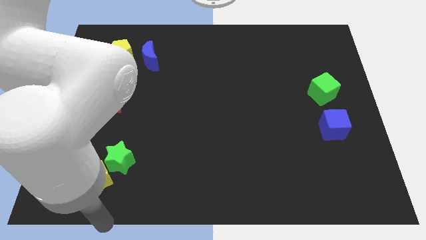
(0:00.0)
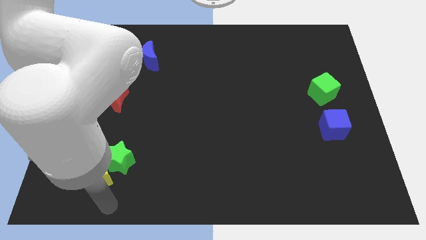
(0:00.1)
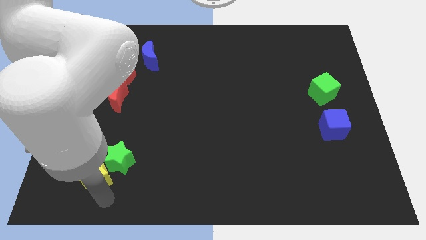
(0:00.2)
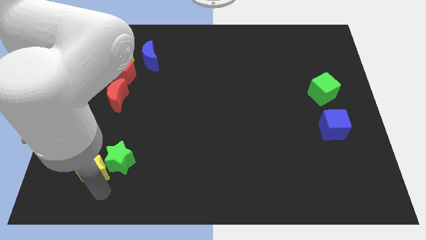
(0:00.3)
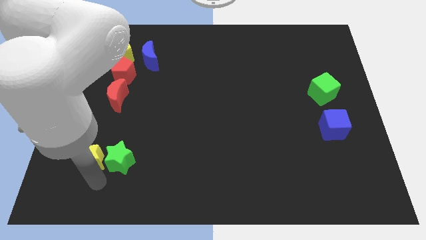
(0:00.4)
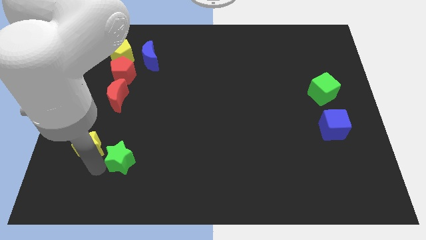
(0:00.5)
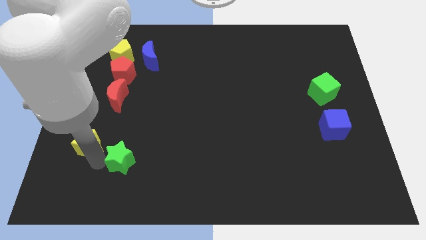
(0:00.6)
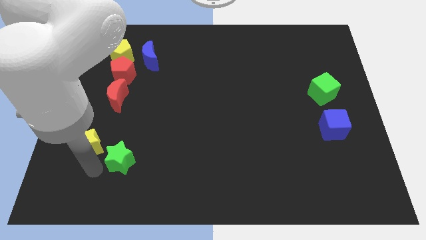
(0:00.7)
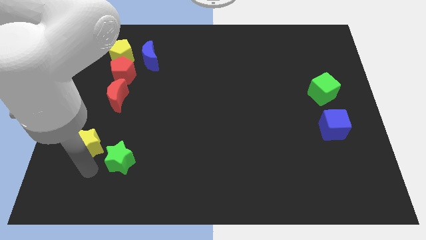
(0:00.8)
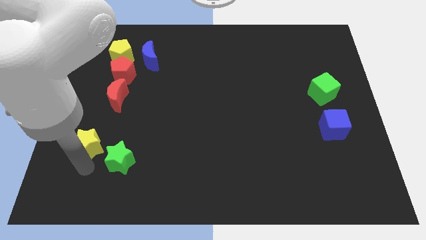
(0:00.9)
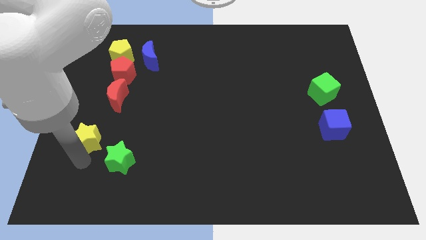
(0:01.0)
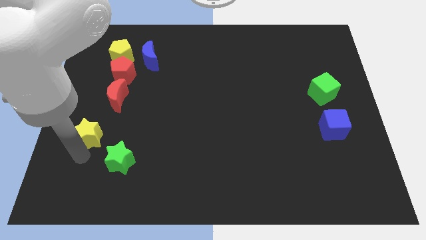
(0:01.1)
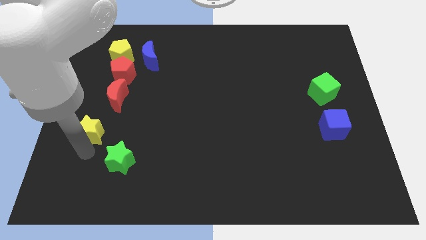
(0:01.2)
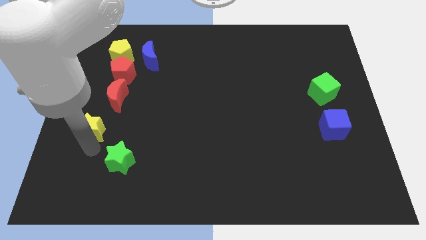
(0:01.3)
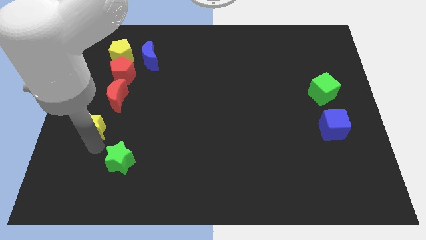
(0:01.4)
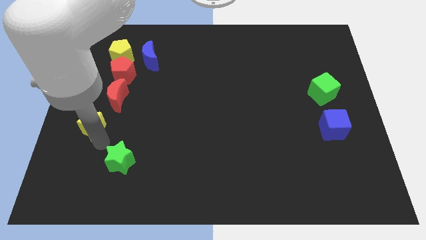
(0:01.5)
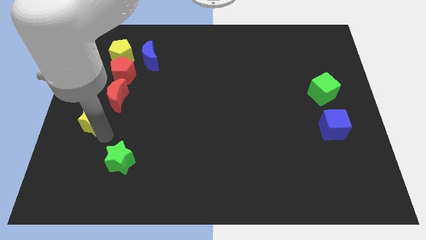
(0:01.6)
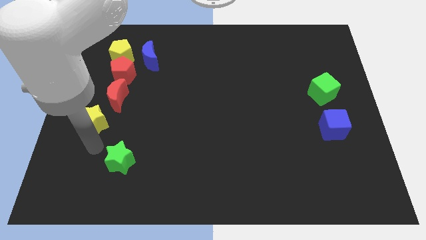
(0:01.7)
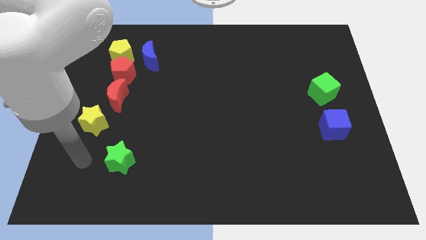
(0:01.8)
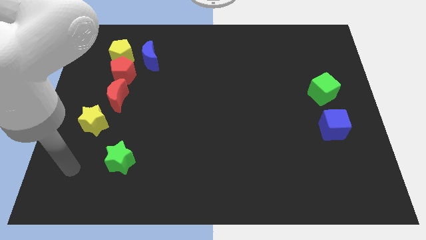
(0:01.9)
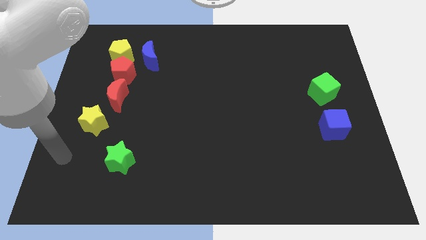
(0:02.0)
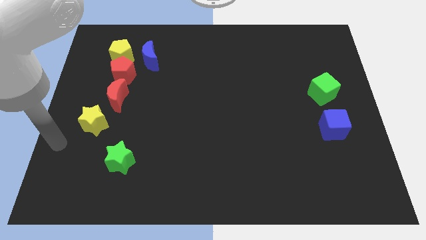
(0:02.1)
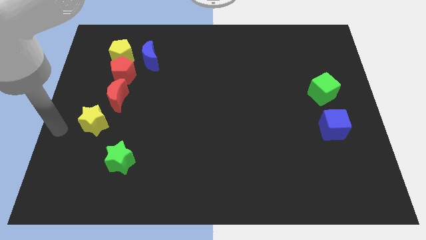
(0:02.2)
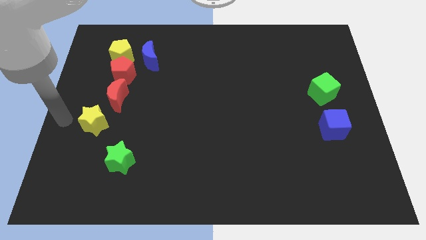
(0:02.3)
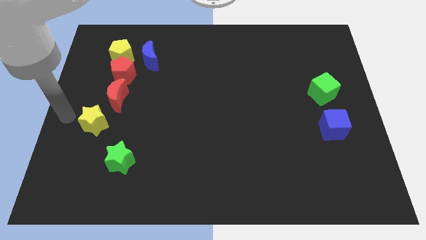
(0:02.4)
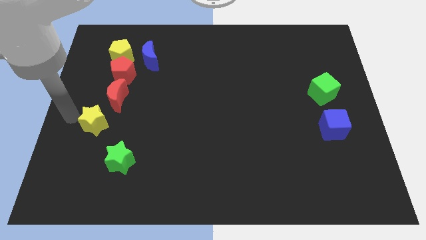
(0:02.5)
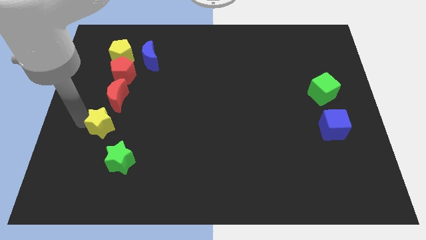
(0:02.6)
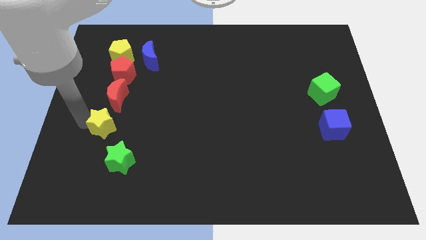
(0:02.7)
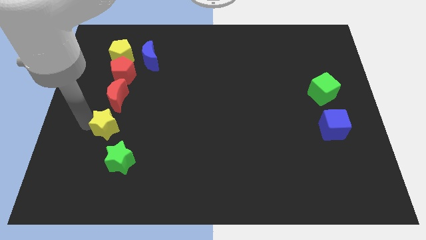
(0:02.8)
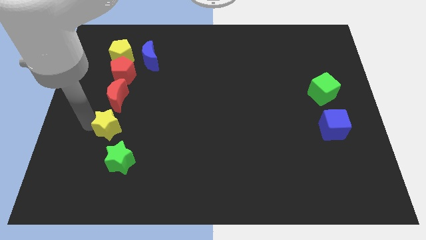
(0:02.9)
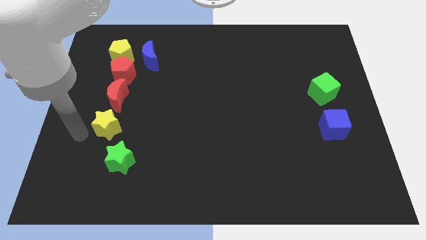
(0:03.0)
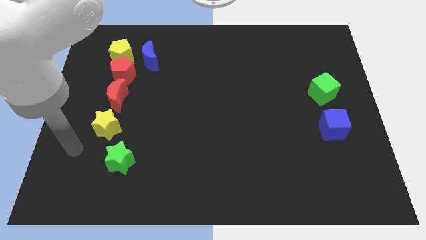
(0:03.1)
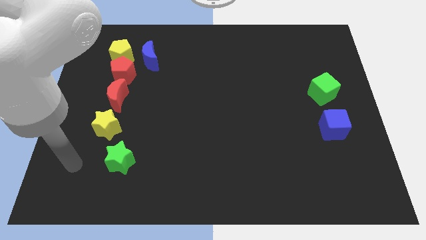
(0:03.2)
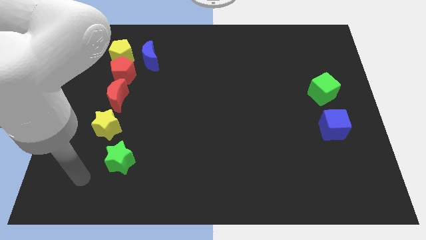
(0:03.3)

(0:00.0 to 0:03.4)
drag yellow star below red moon

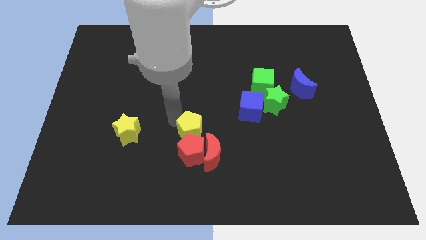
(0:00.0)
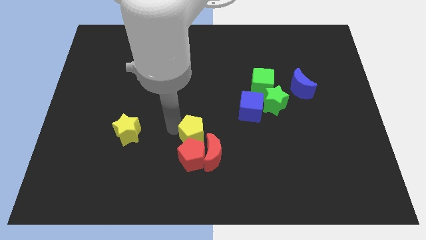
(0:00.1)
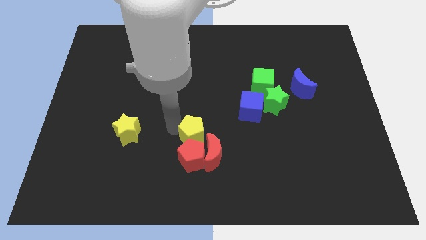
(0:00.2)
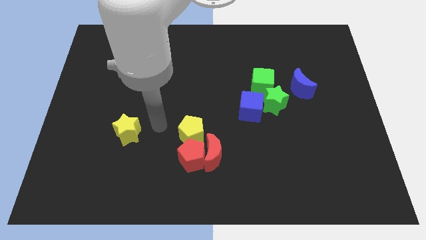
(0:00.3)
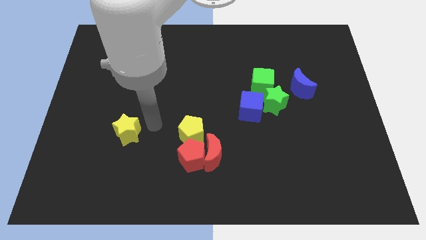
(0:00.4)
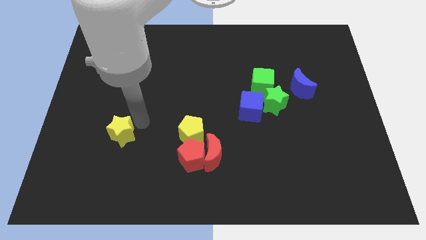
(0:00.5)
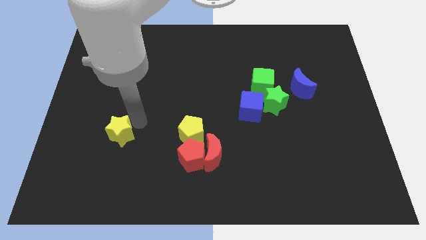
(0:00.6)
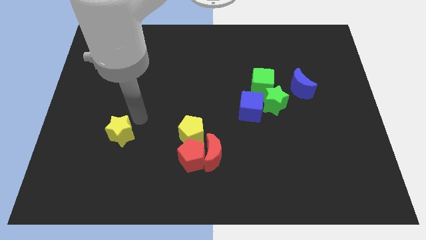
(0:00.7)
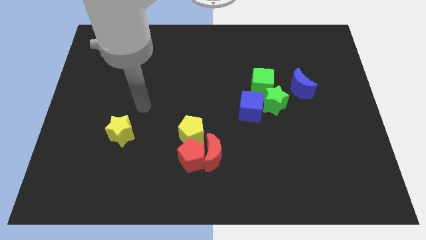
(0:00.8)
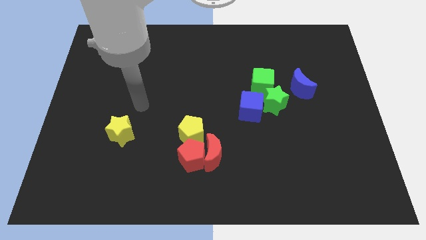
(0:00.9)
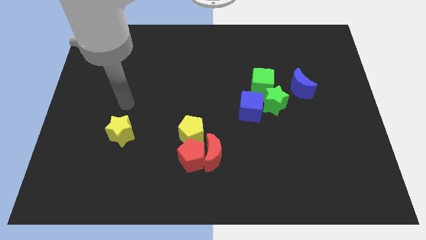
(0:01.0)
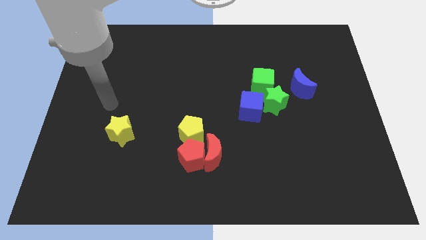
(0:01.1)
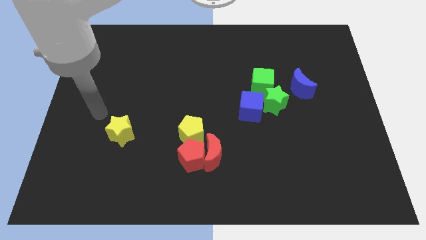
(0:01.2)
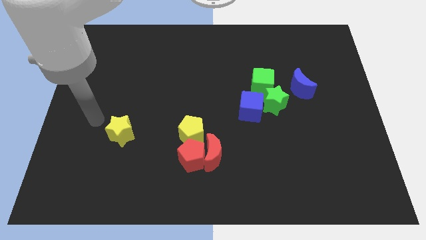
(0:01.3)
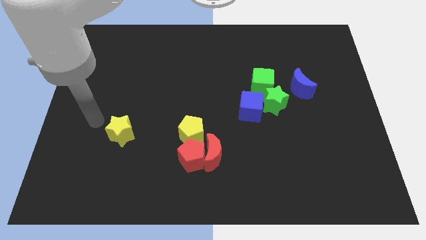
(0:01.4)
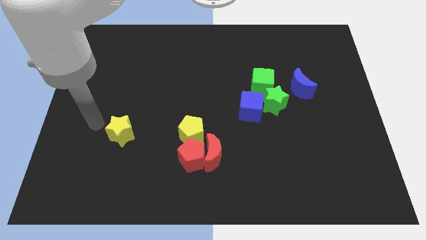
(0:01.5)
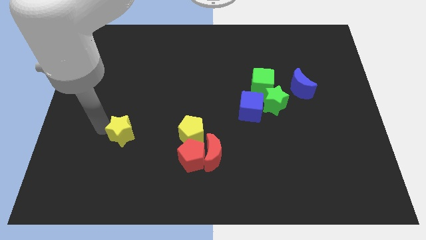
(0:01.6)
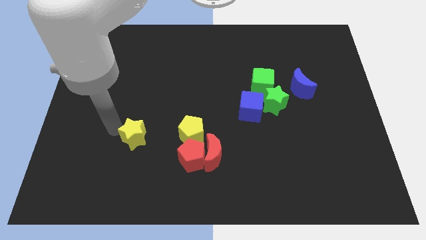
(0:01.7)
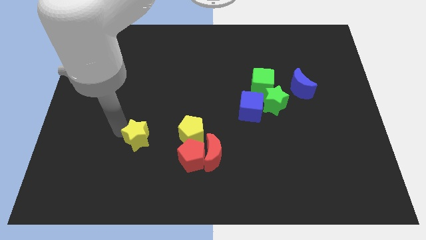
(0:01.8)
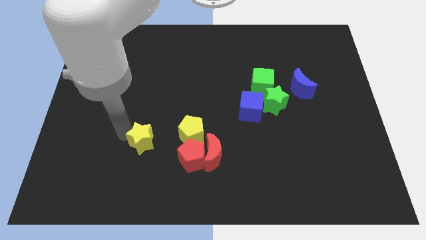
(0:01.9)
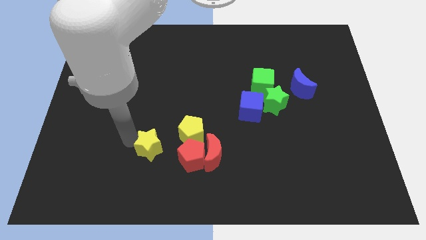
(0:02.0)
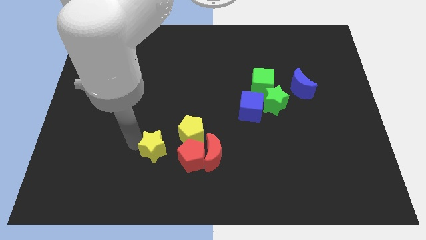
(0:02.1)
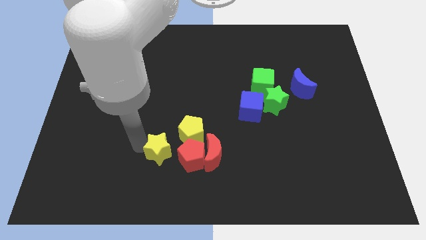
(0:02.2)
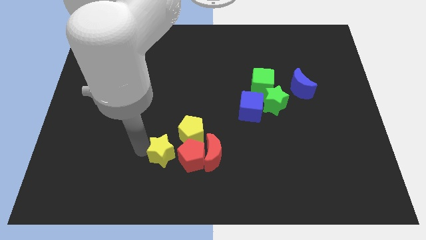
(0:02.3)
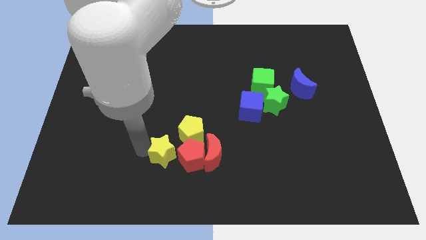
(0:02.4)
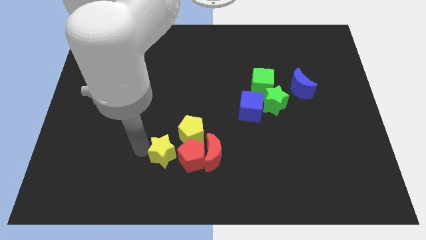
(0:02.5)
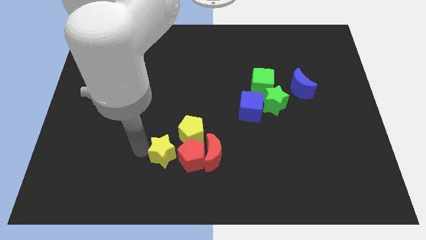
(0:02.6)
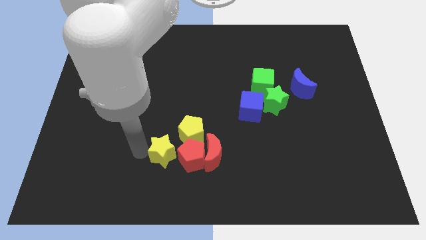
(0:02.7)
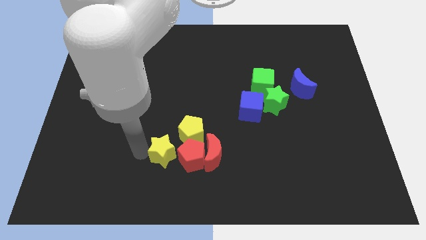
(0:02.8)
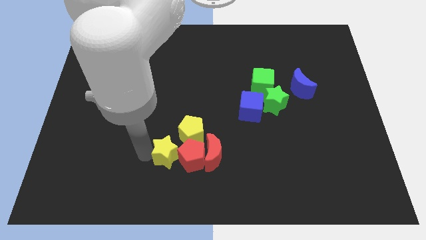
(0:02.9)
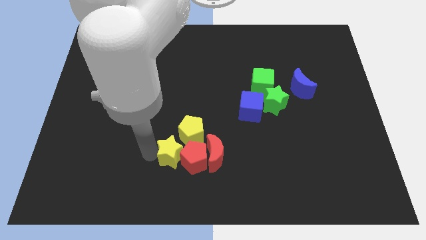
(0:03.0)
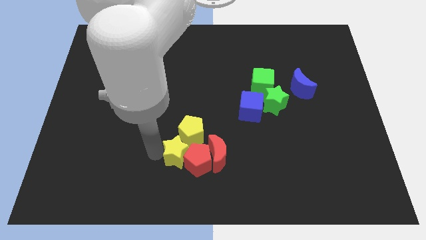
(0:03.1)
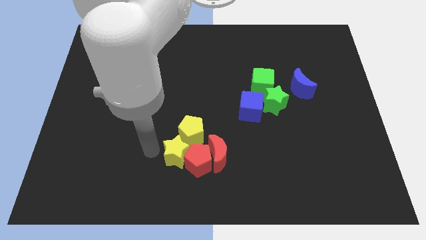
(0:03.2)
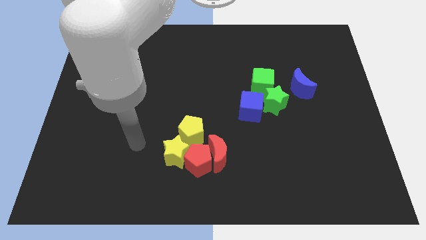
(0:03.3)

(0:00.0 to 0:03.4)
push the yellow star into the group of blocks

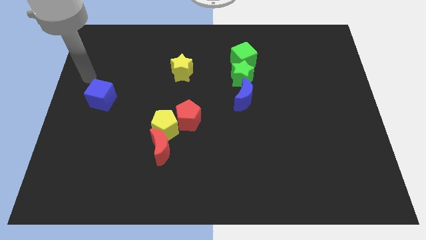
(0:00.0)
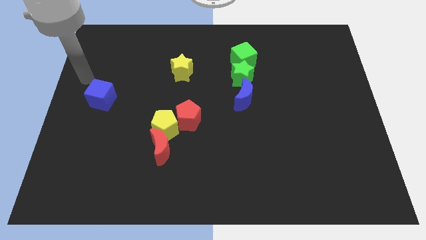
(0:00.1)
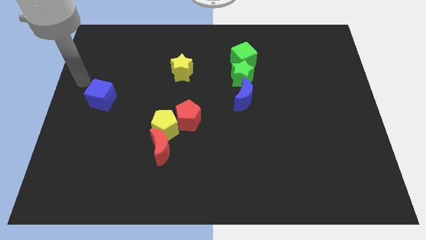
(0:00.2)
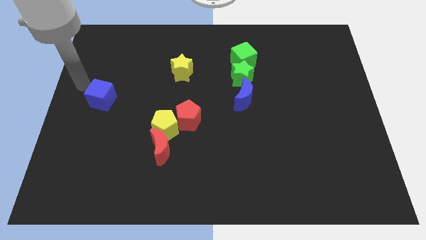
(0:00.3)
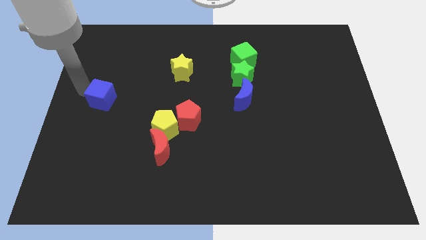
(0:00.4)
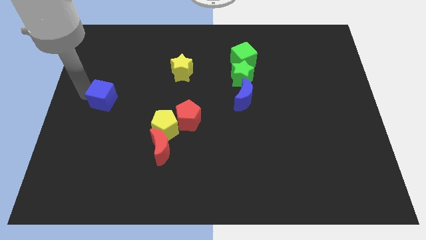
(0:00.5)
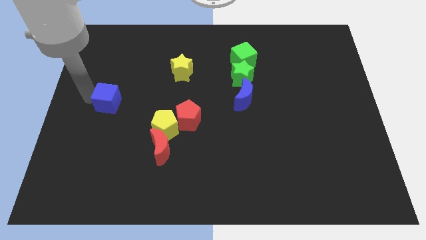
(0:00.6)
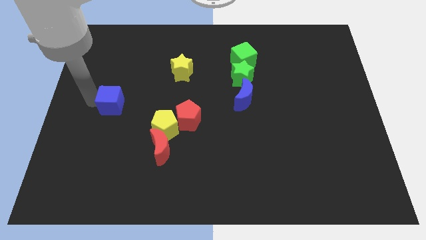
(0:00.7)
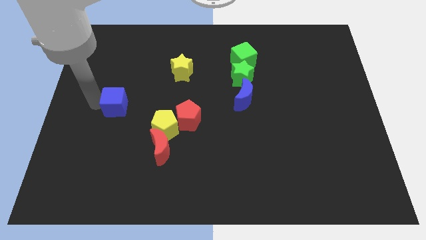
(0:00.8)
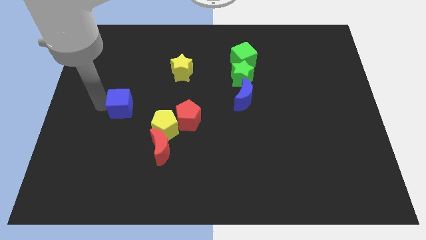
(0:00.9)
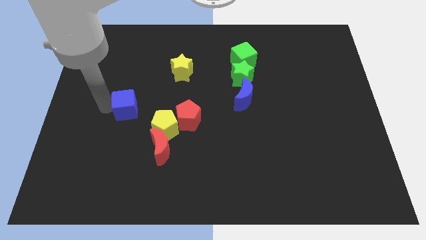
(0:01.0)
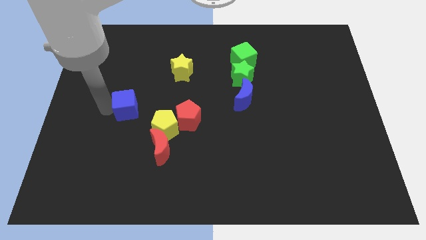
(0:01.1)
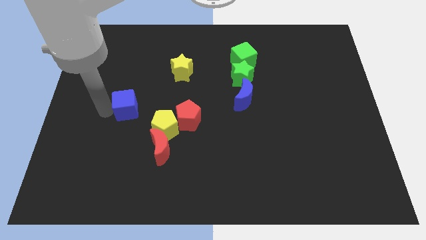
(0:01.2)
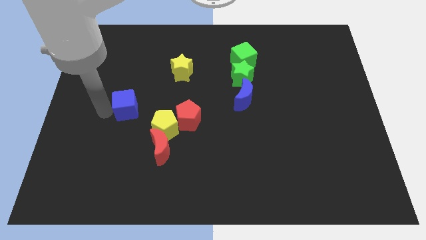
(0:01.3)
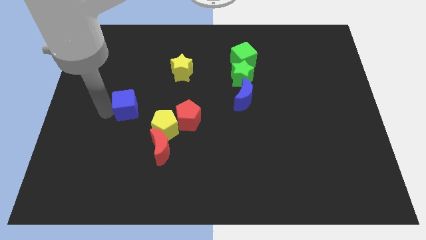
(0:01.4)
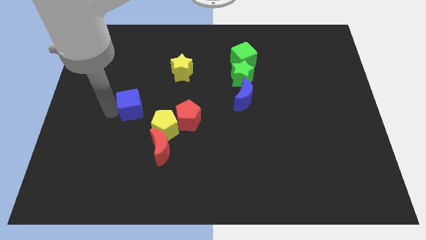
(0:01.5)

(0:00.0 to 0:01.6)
move the blue cube slightly to the right

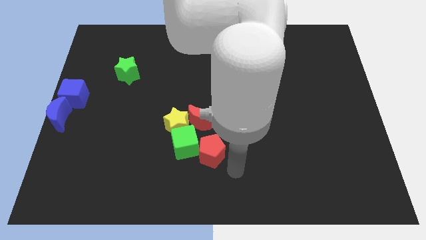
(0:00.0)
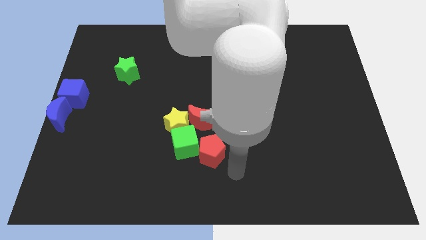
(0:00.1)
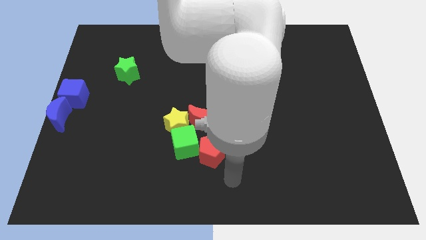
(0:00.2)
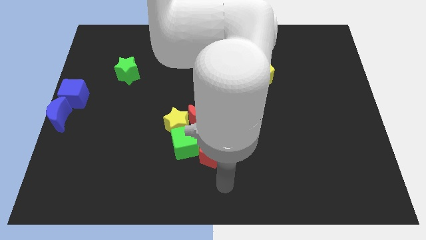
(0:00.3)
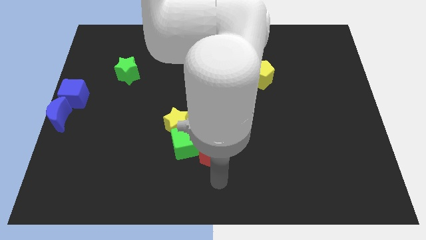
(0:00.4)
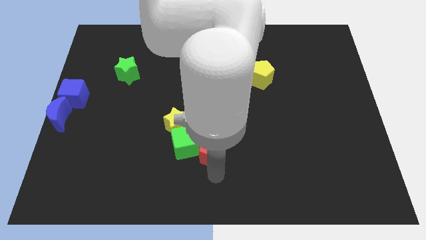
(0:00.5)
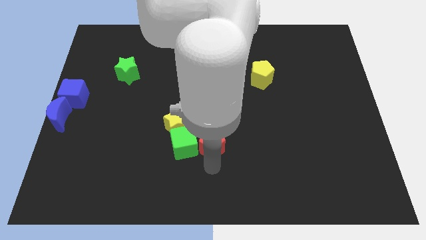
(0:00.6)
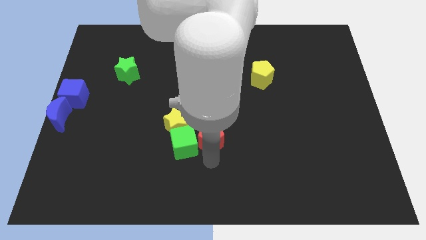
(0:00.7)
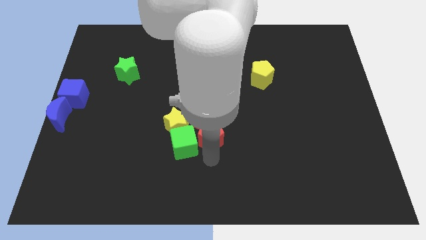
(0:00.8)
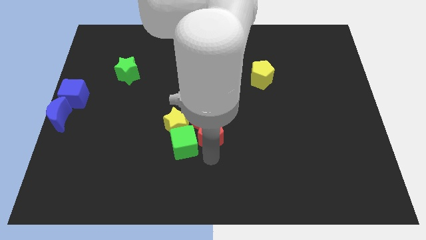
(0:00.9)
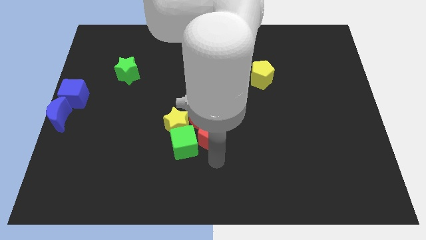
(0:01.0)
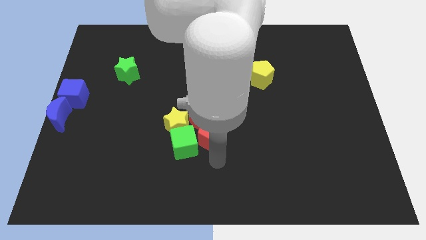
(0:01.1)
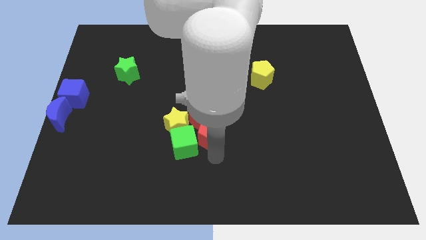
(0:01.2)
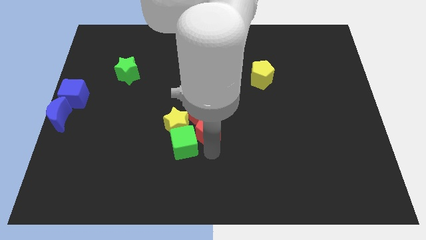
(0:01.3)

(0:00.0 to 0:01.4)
push the red pentagon into the red crescent
